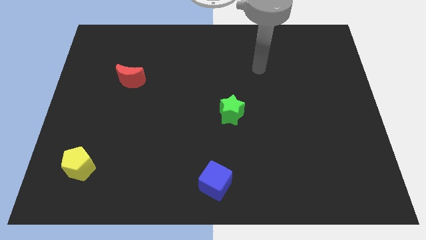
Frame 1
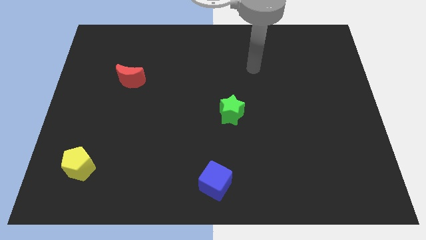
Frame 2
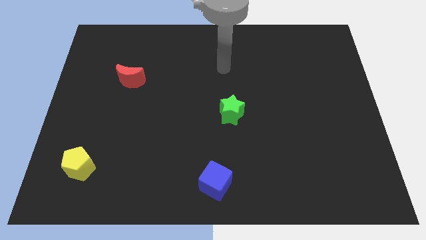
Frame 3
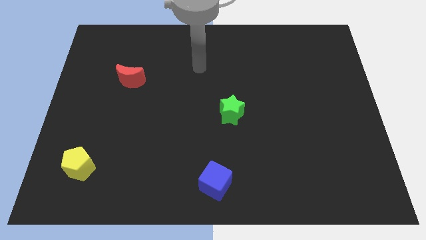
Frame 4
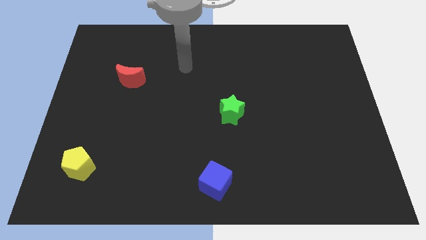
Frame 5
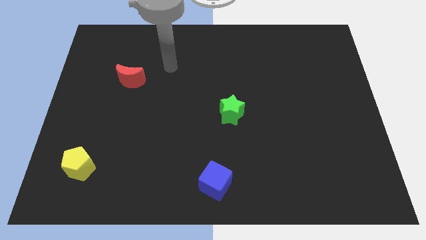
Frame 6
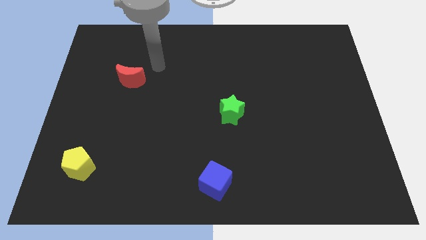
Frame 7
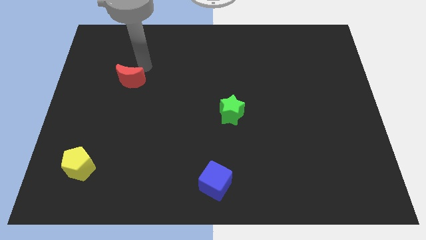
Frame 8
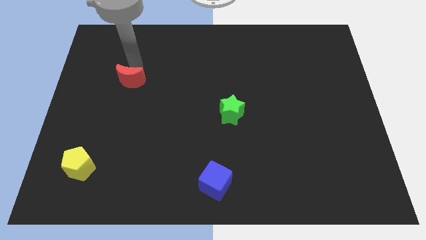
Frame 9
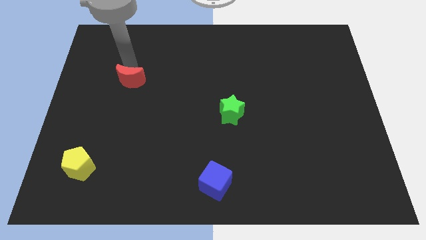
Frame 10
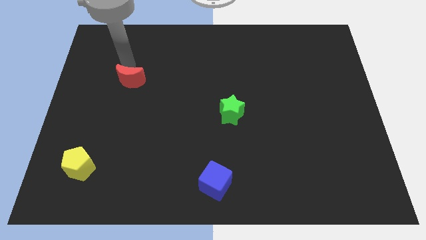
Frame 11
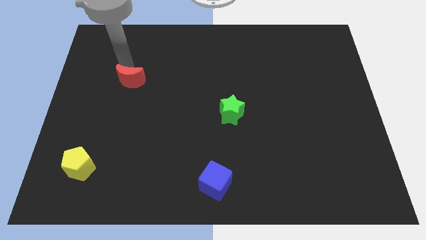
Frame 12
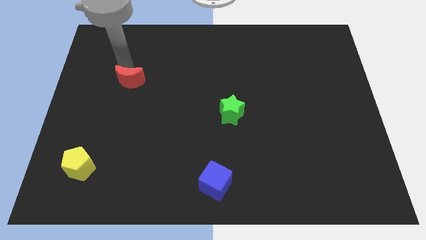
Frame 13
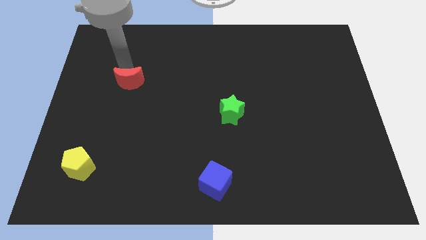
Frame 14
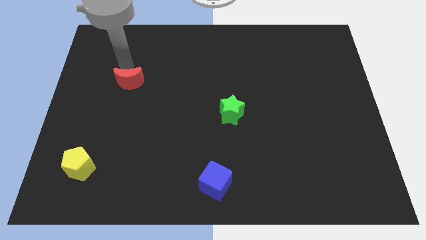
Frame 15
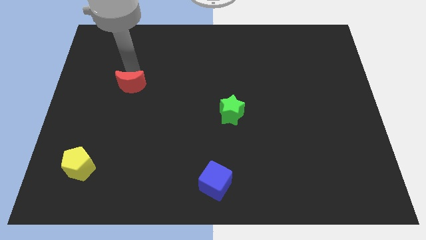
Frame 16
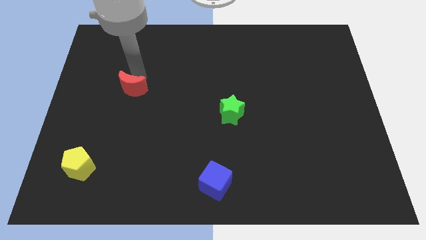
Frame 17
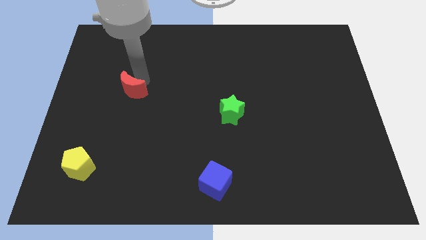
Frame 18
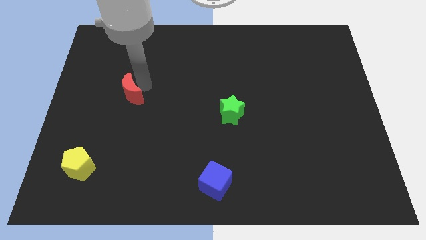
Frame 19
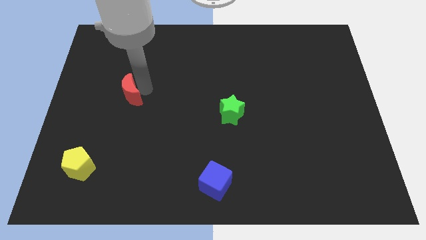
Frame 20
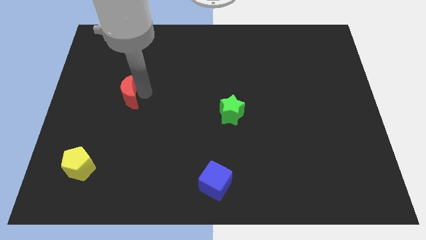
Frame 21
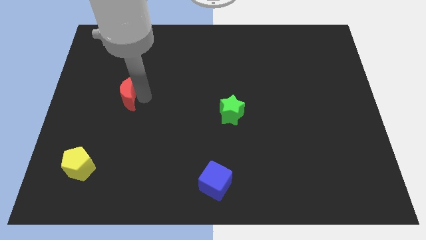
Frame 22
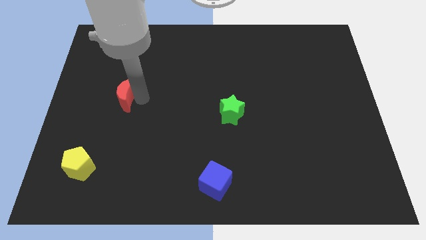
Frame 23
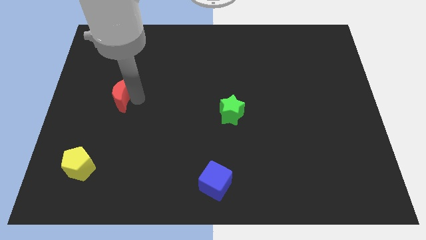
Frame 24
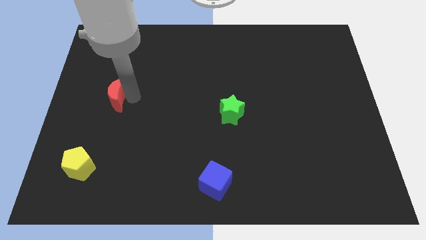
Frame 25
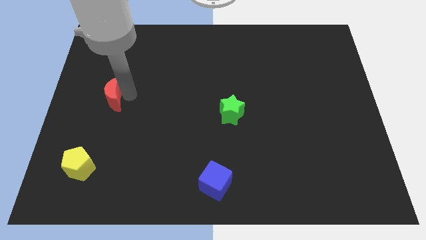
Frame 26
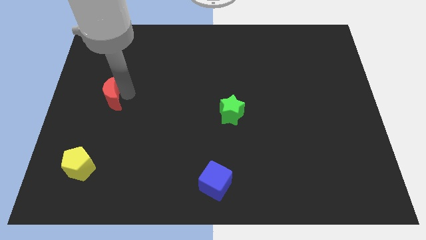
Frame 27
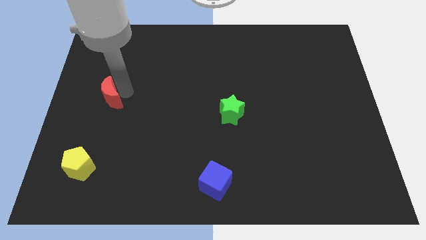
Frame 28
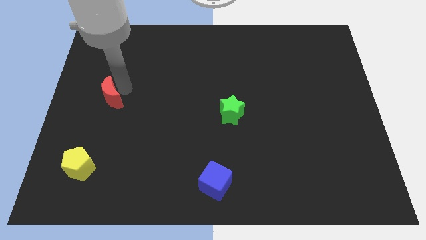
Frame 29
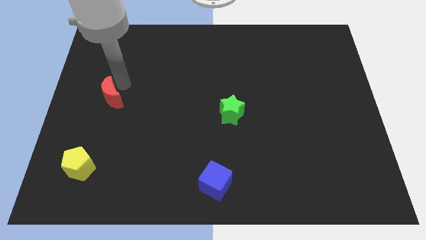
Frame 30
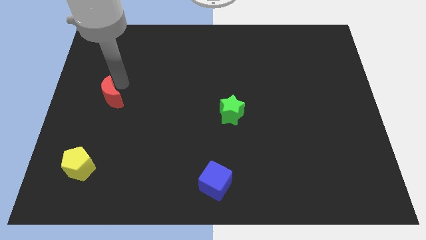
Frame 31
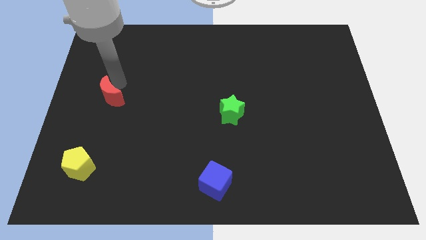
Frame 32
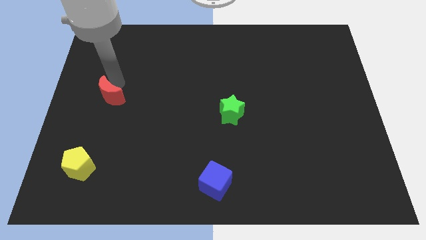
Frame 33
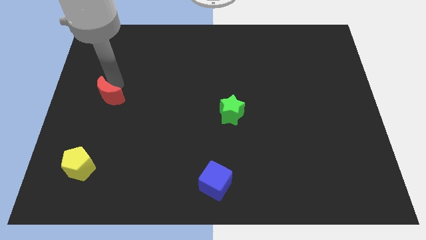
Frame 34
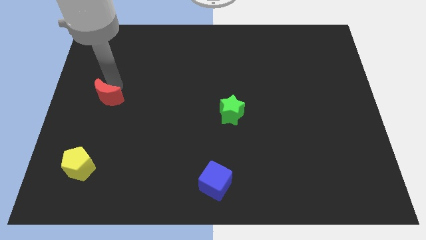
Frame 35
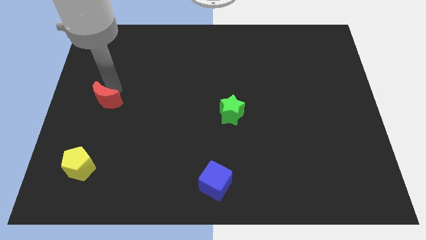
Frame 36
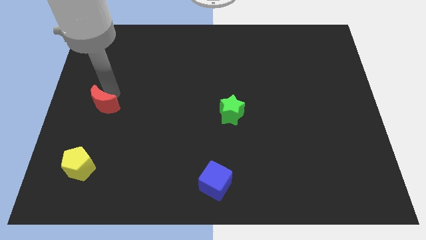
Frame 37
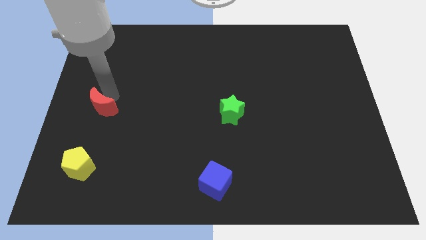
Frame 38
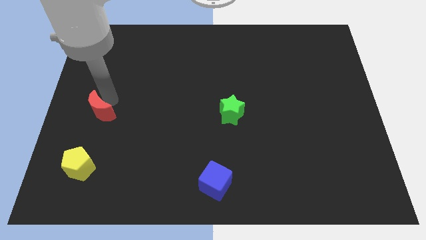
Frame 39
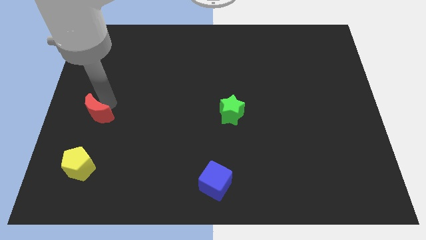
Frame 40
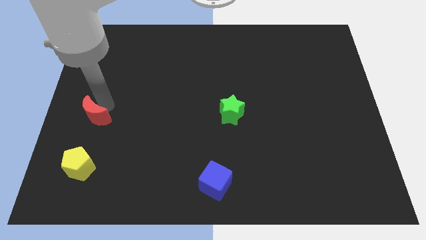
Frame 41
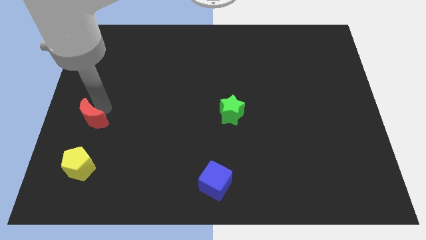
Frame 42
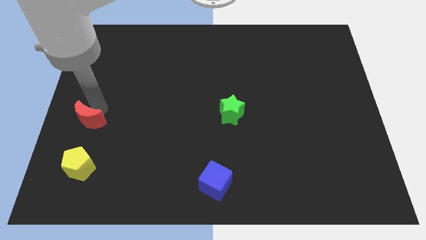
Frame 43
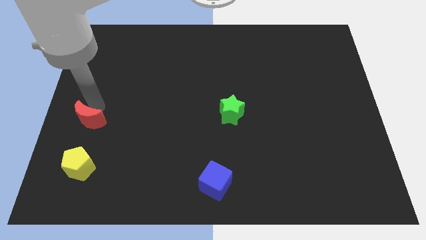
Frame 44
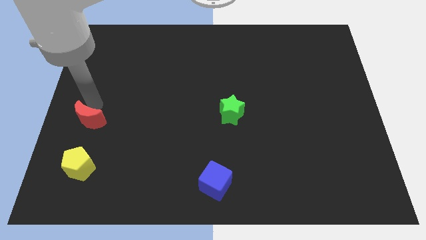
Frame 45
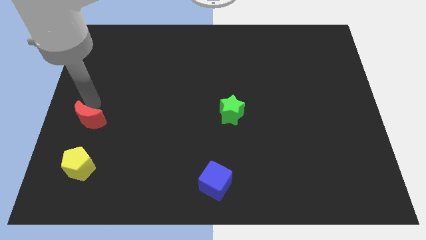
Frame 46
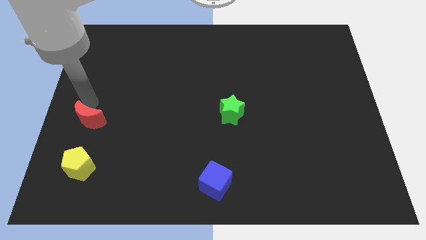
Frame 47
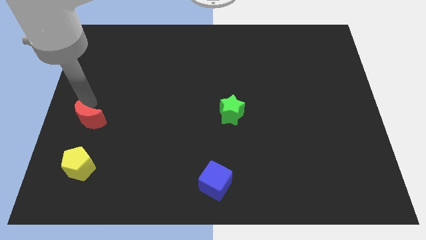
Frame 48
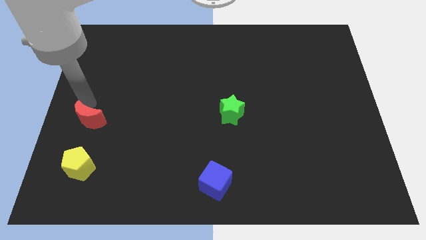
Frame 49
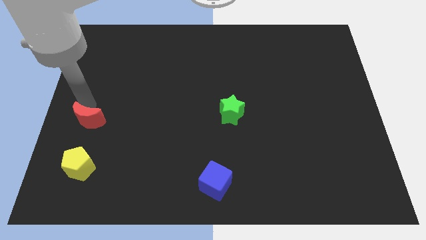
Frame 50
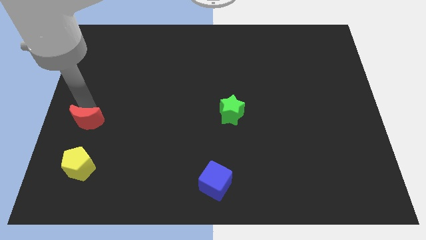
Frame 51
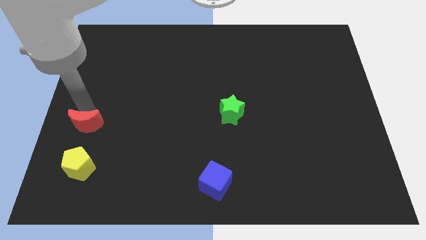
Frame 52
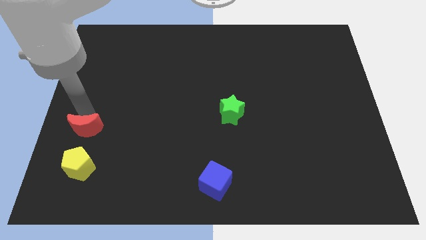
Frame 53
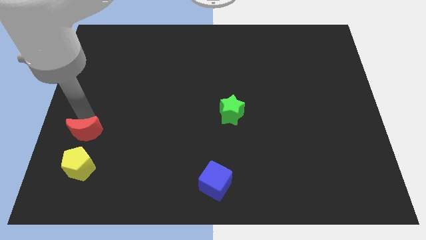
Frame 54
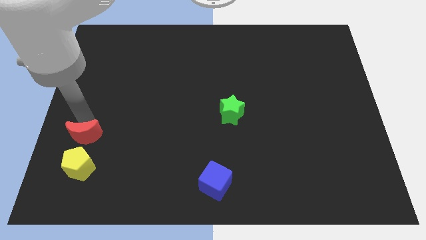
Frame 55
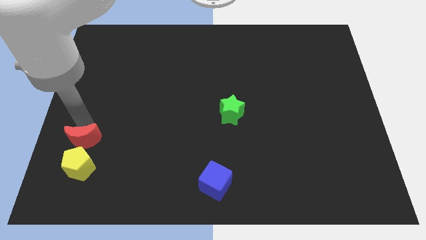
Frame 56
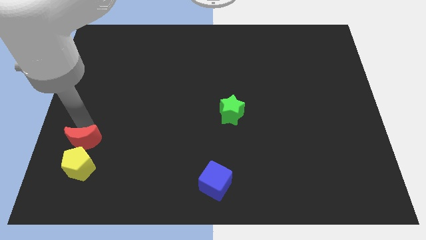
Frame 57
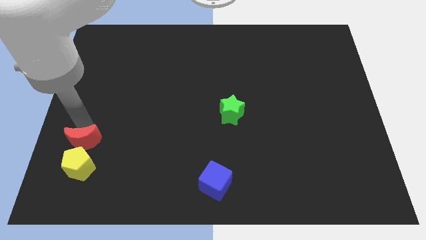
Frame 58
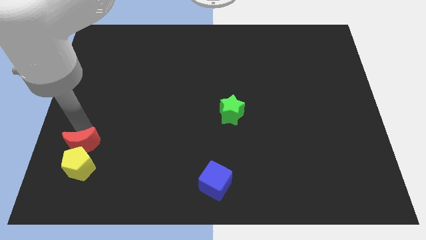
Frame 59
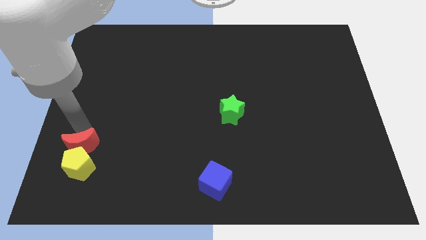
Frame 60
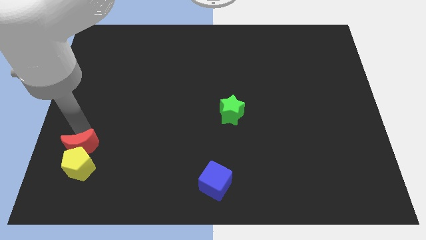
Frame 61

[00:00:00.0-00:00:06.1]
push the red block next to the yellow block

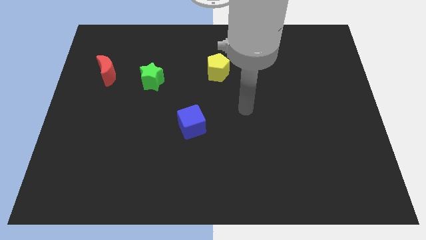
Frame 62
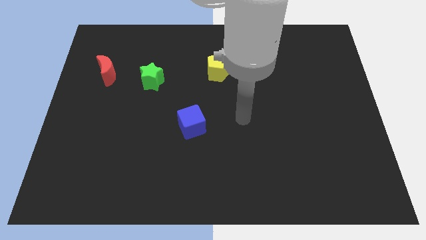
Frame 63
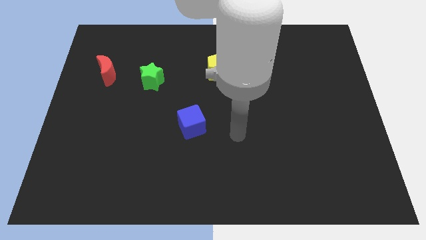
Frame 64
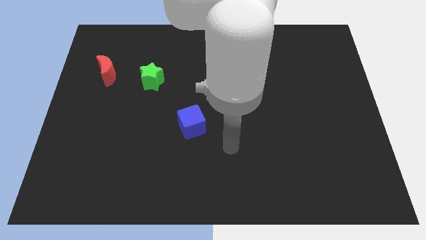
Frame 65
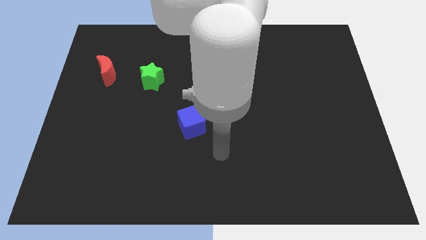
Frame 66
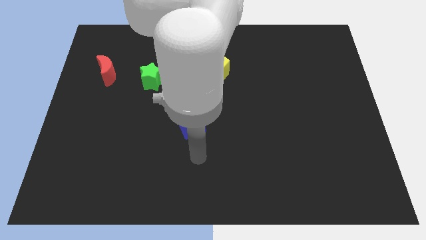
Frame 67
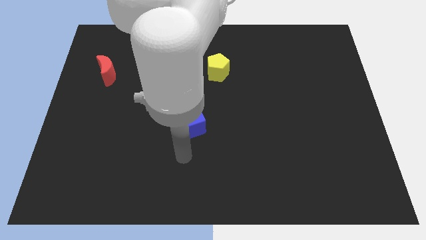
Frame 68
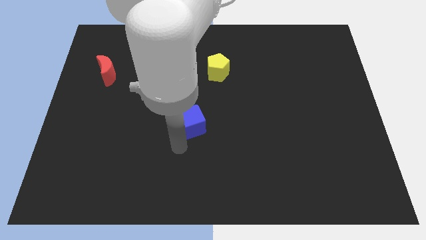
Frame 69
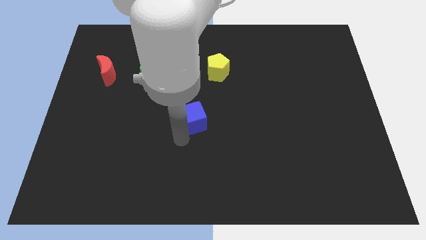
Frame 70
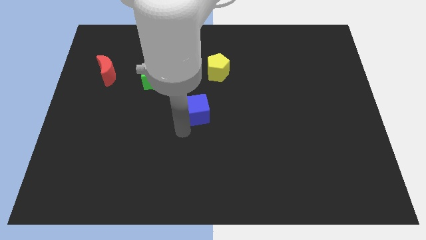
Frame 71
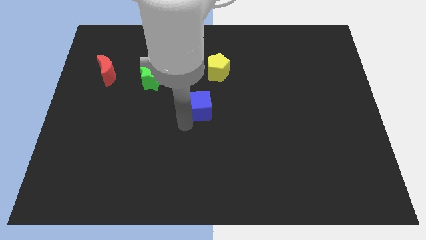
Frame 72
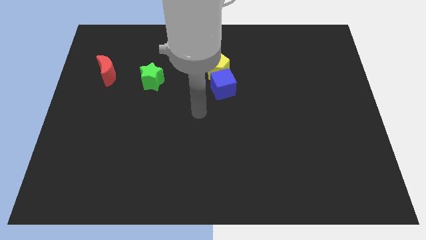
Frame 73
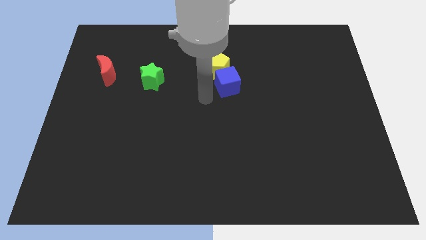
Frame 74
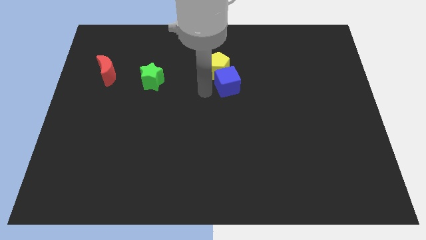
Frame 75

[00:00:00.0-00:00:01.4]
move the blue cube next to the yellow block

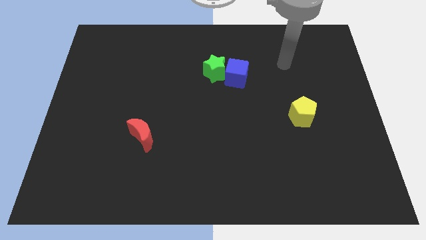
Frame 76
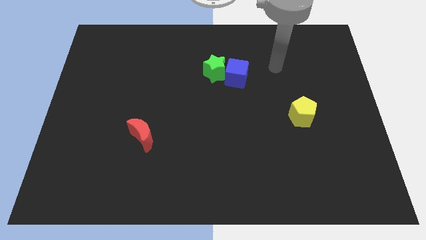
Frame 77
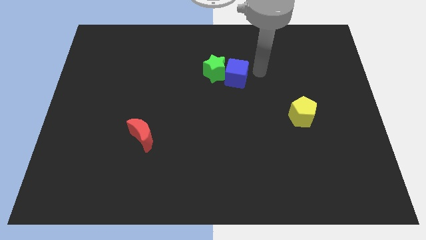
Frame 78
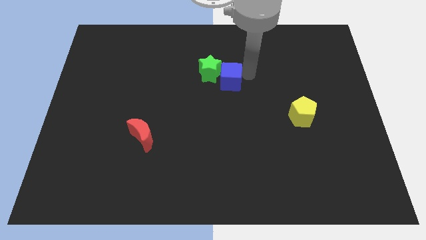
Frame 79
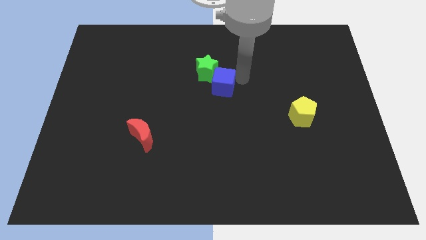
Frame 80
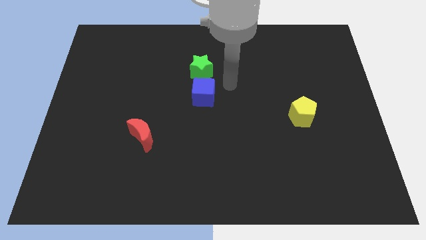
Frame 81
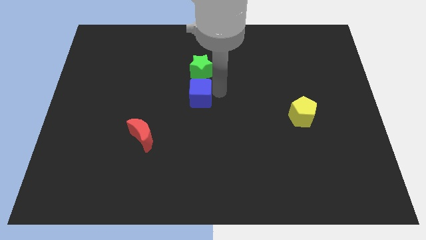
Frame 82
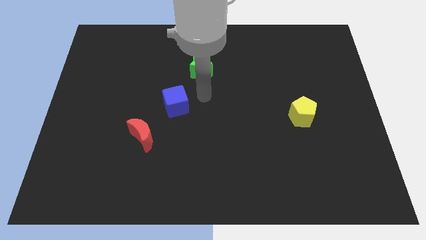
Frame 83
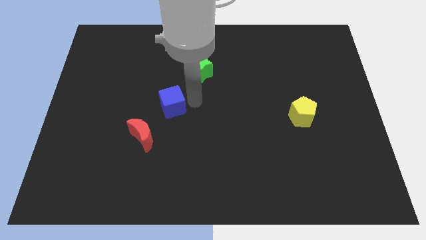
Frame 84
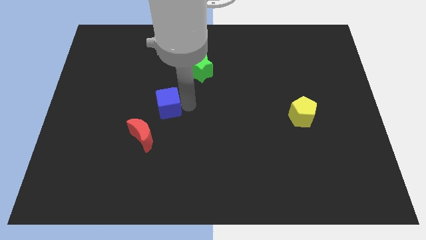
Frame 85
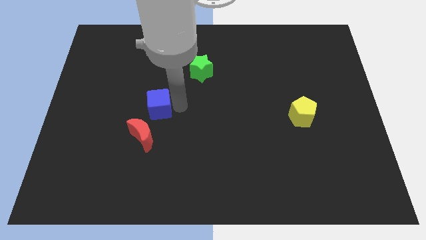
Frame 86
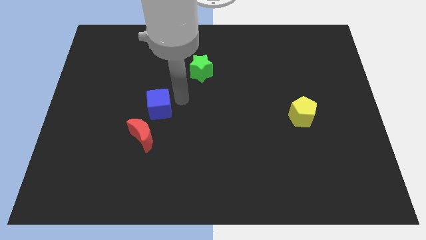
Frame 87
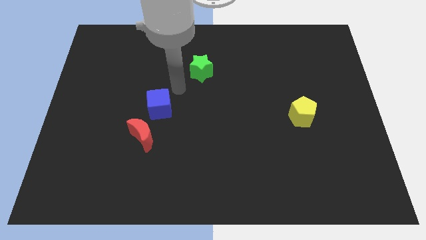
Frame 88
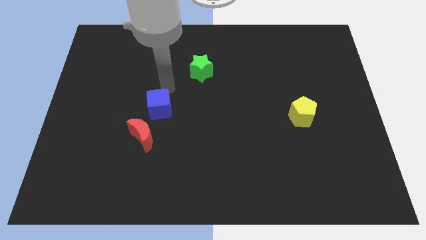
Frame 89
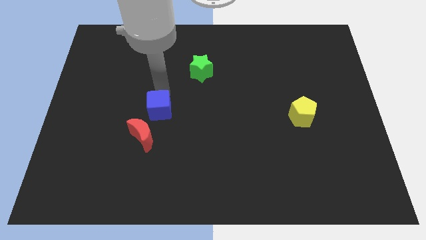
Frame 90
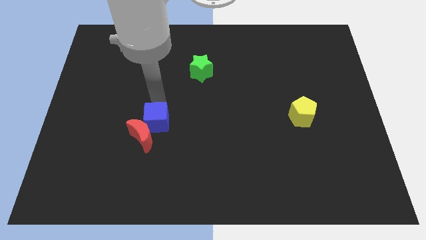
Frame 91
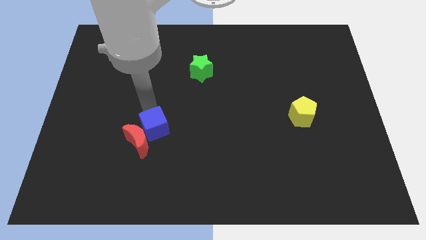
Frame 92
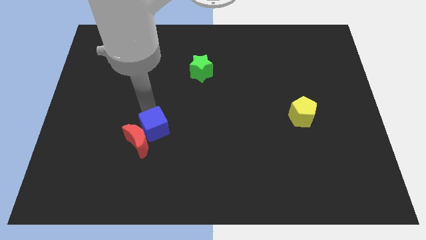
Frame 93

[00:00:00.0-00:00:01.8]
move the blue block close to the red block
